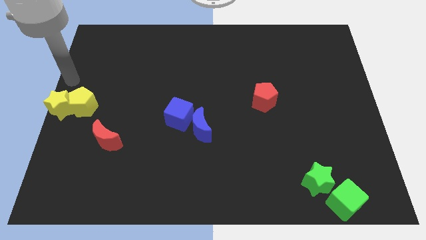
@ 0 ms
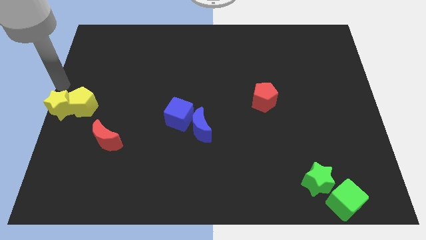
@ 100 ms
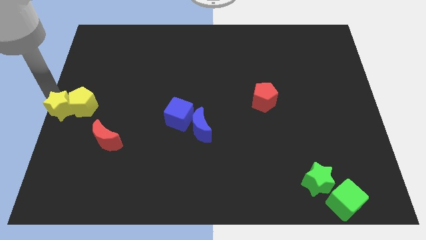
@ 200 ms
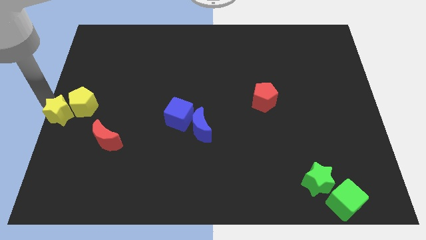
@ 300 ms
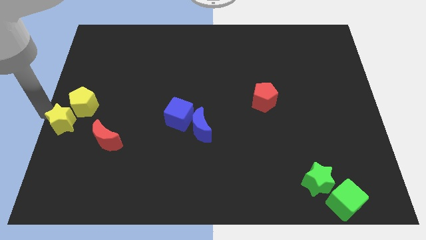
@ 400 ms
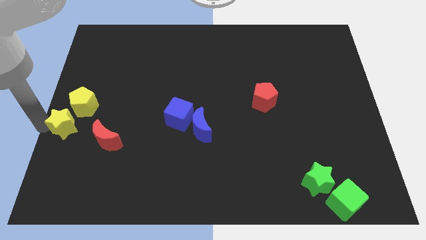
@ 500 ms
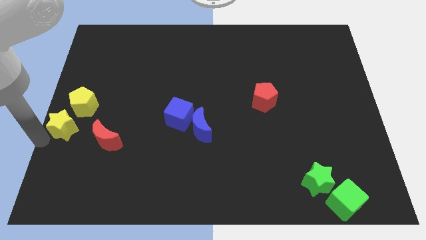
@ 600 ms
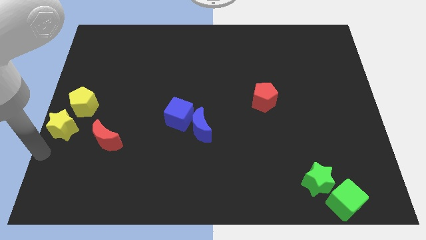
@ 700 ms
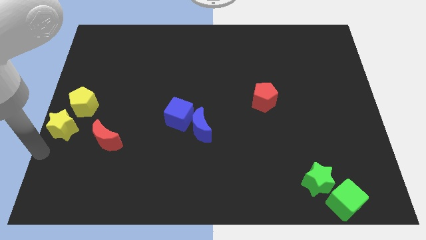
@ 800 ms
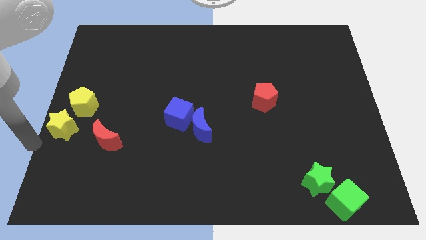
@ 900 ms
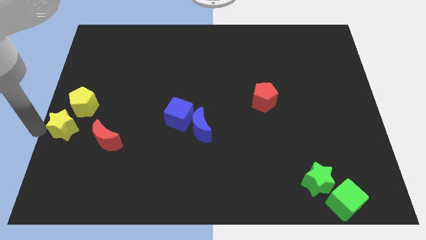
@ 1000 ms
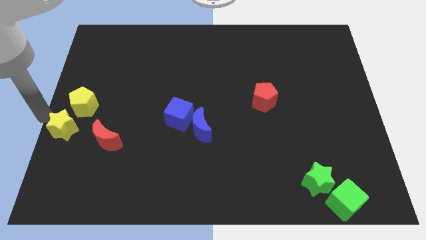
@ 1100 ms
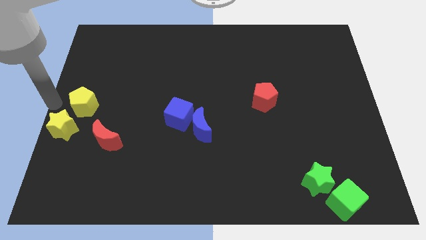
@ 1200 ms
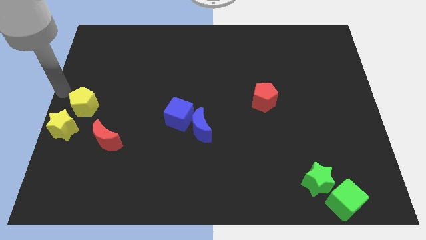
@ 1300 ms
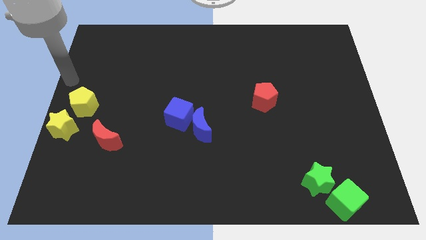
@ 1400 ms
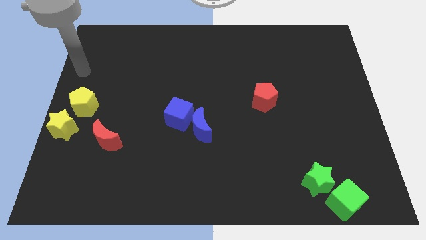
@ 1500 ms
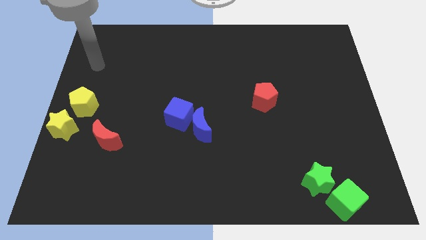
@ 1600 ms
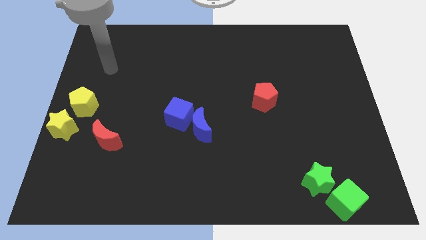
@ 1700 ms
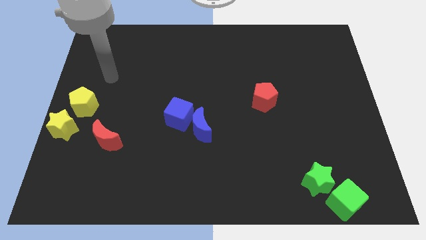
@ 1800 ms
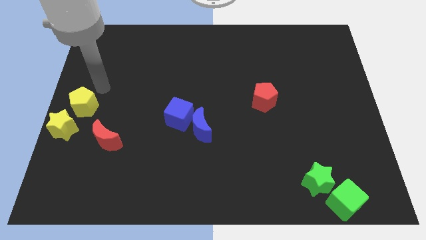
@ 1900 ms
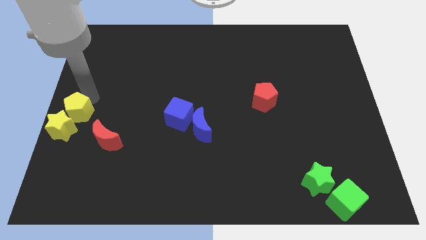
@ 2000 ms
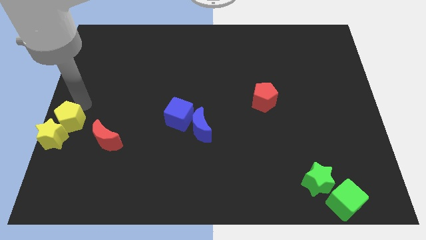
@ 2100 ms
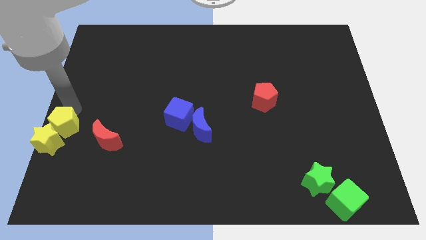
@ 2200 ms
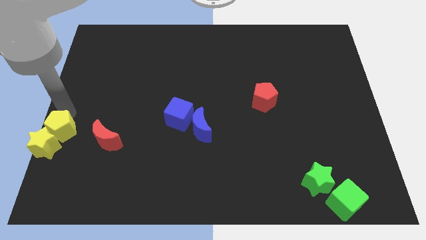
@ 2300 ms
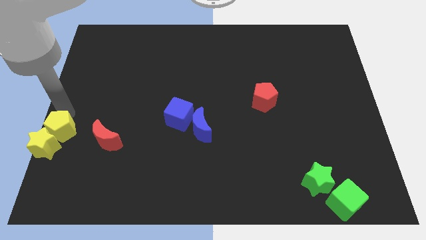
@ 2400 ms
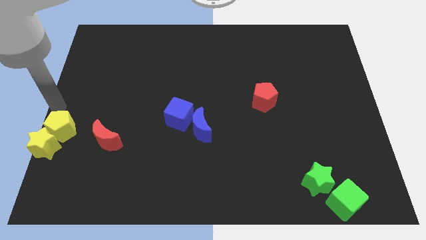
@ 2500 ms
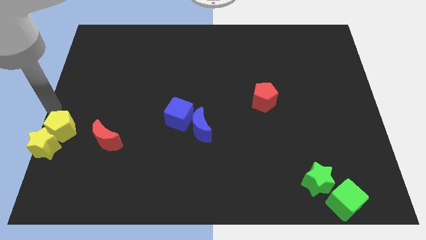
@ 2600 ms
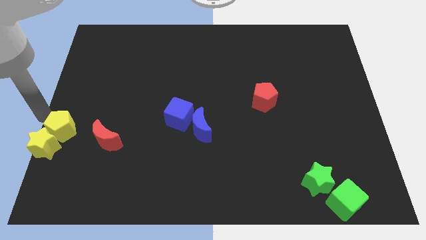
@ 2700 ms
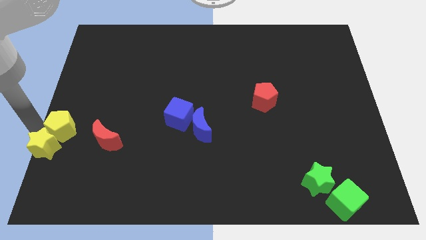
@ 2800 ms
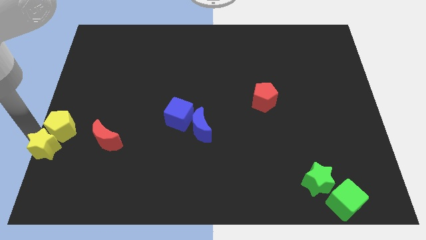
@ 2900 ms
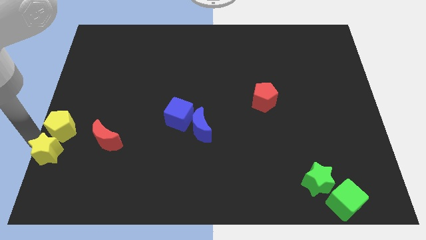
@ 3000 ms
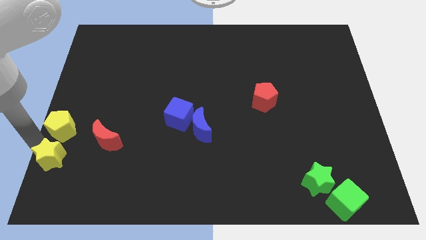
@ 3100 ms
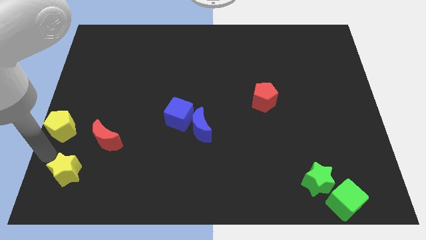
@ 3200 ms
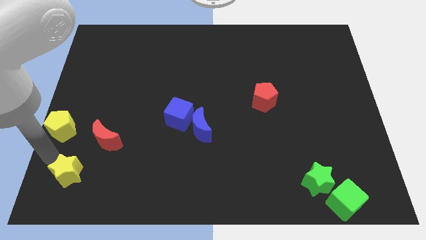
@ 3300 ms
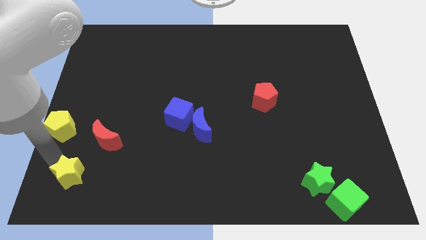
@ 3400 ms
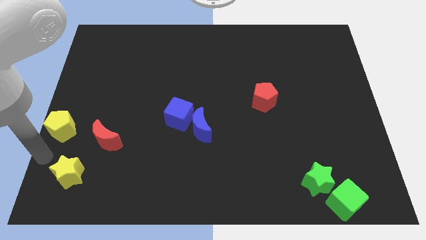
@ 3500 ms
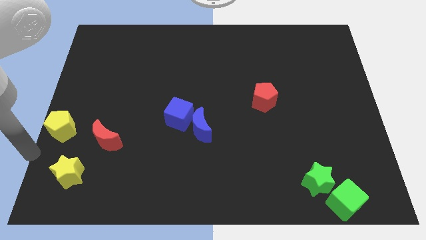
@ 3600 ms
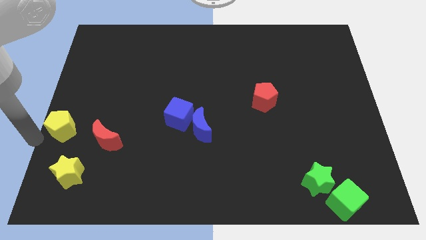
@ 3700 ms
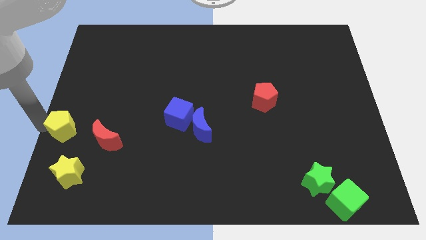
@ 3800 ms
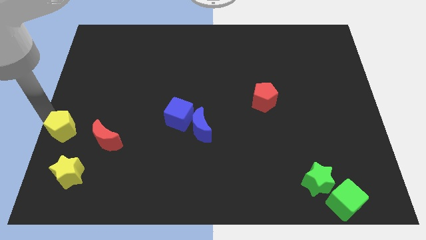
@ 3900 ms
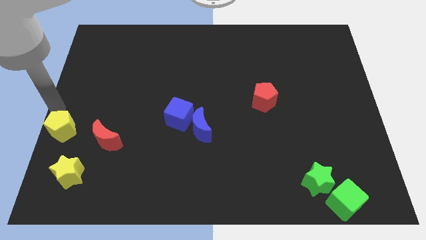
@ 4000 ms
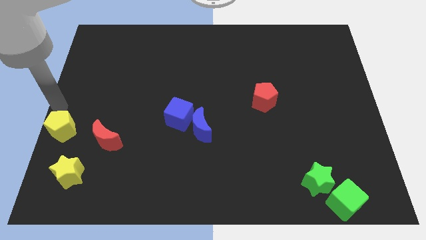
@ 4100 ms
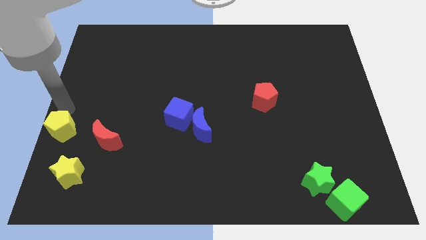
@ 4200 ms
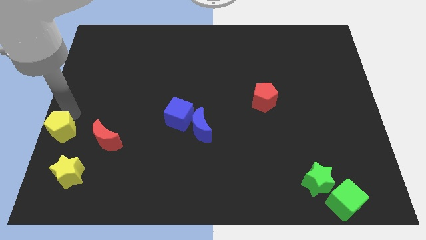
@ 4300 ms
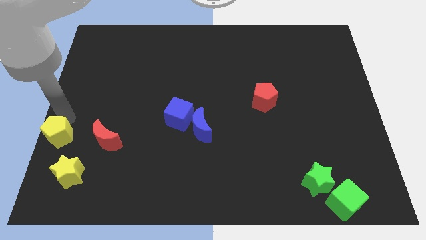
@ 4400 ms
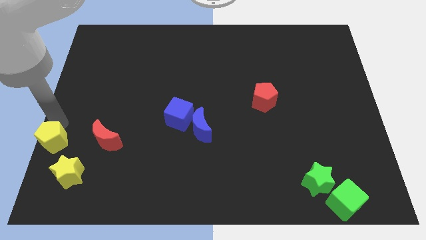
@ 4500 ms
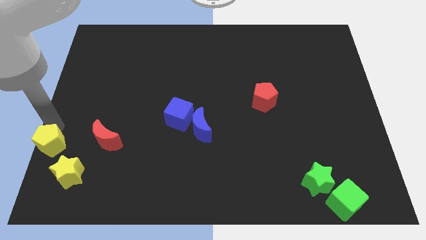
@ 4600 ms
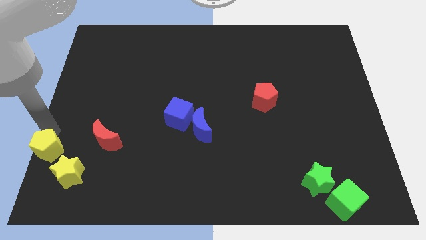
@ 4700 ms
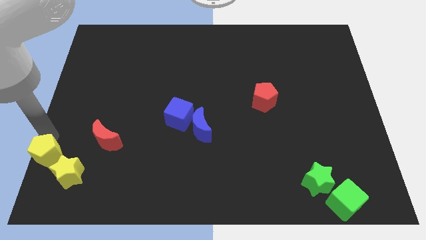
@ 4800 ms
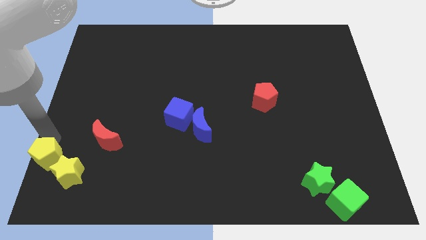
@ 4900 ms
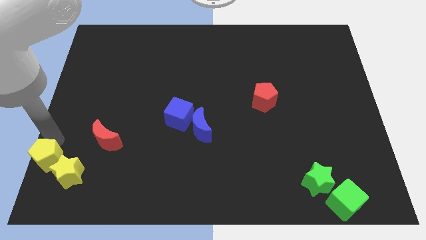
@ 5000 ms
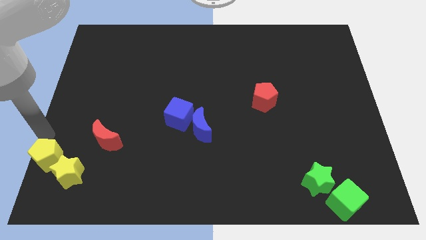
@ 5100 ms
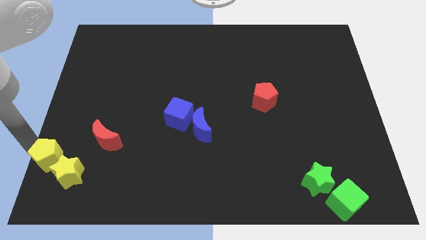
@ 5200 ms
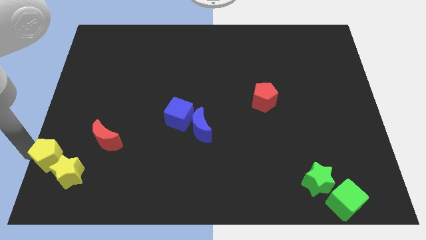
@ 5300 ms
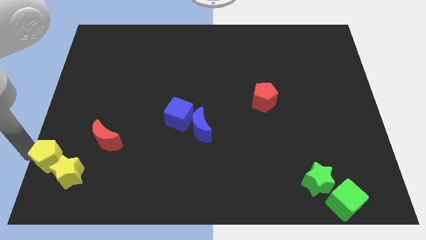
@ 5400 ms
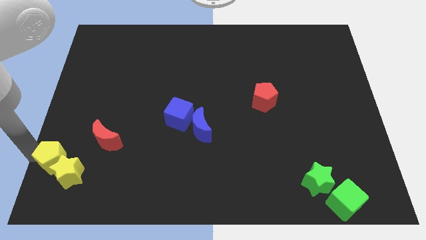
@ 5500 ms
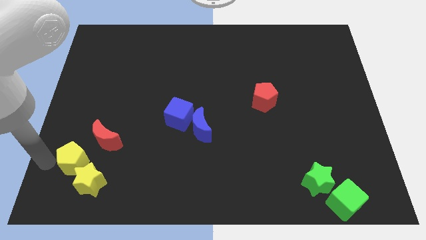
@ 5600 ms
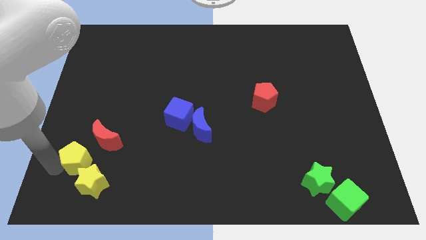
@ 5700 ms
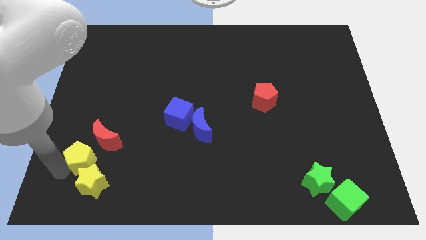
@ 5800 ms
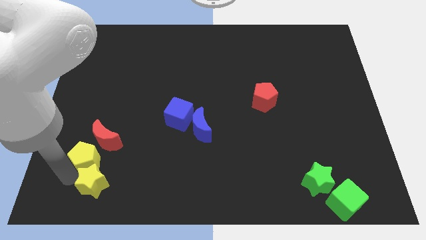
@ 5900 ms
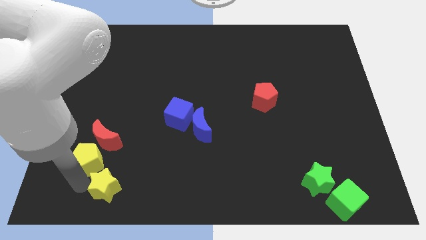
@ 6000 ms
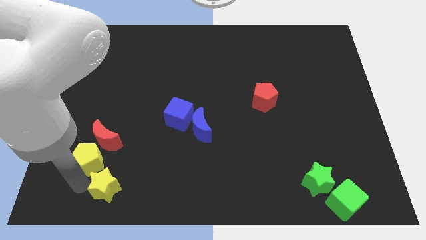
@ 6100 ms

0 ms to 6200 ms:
move the yellow objects to the bottom side of the red crescent

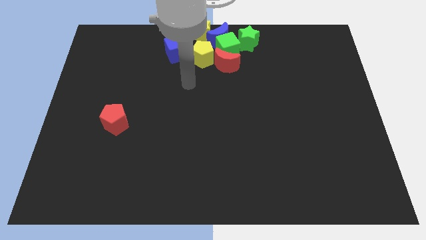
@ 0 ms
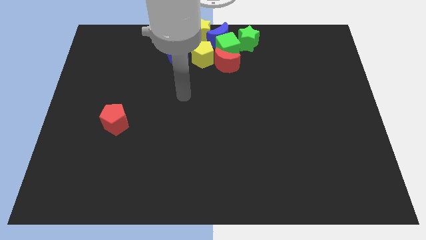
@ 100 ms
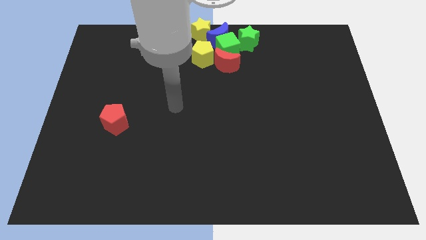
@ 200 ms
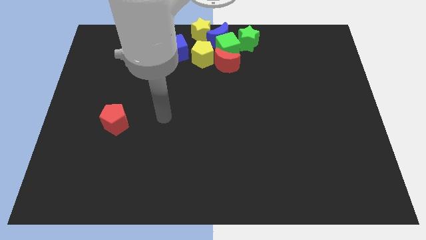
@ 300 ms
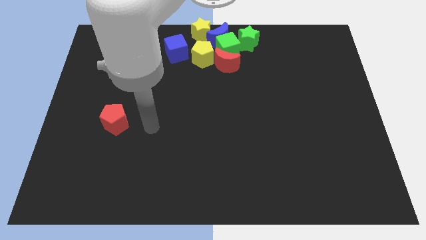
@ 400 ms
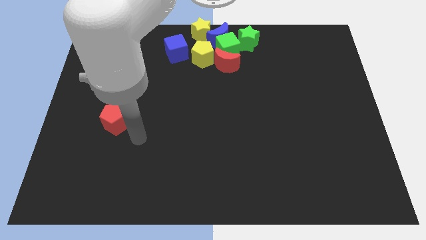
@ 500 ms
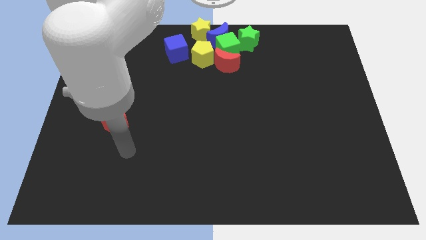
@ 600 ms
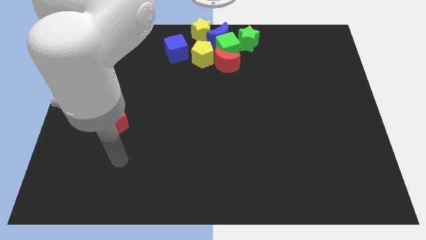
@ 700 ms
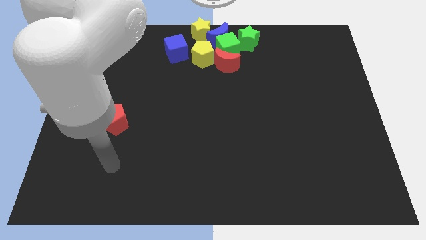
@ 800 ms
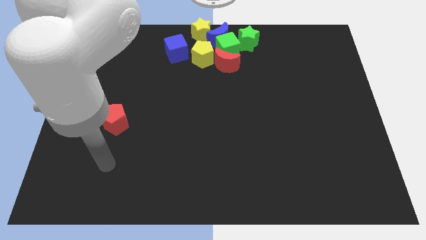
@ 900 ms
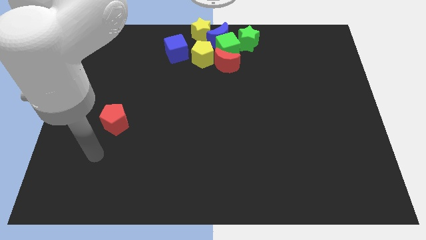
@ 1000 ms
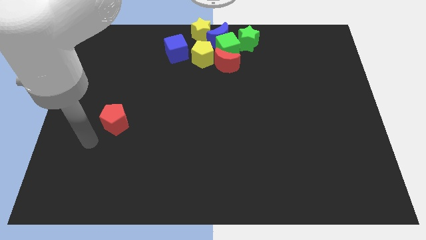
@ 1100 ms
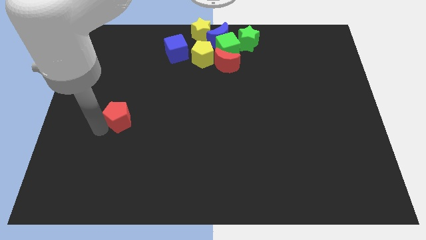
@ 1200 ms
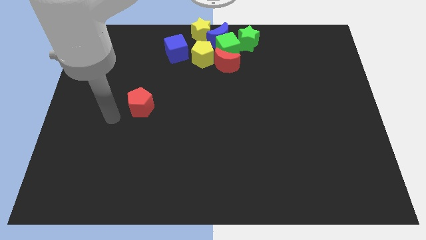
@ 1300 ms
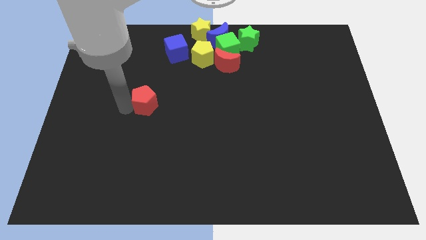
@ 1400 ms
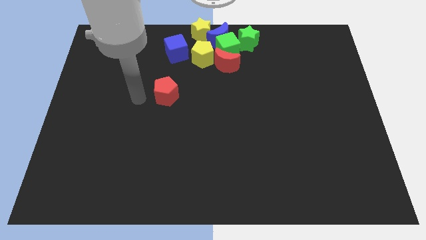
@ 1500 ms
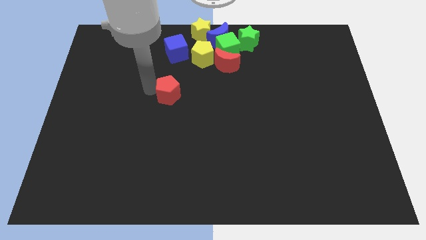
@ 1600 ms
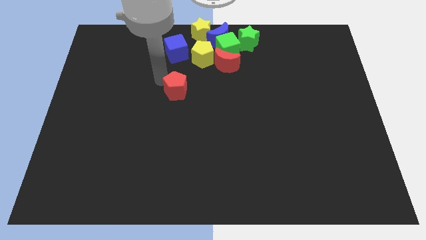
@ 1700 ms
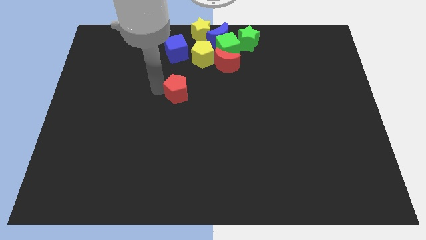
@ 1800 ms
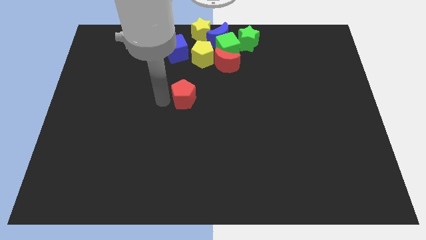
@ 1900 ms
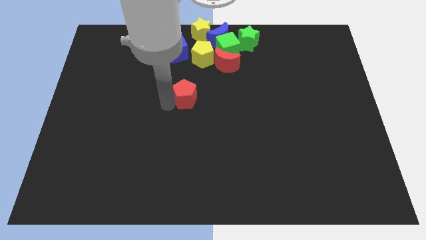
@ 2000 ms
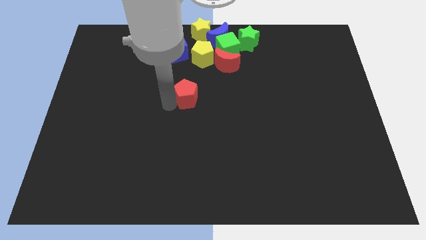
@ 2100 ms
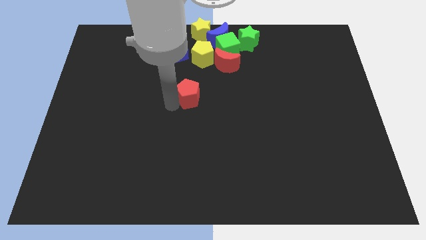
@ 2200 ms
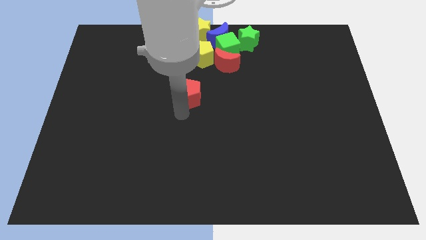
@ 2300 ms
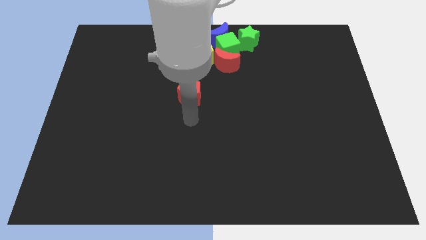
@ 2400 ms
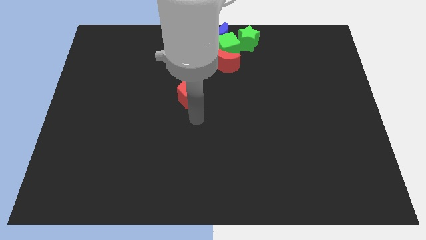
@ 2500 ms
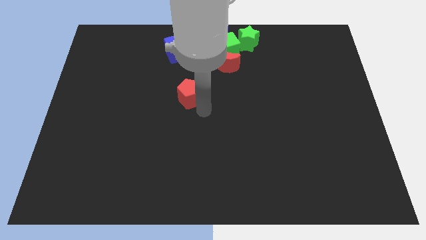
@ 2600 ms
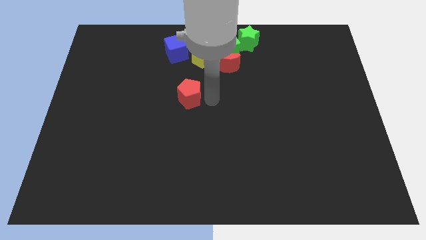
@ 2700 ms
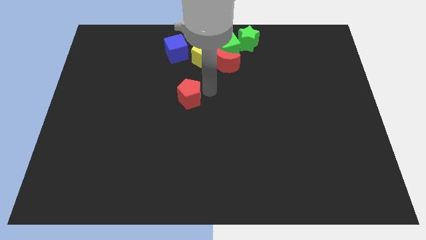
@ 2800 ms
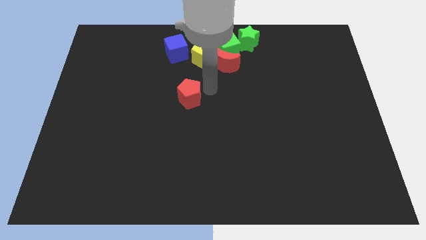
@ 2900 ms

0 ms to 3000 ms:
push red pentagon towards the top center
